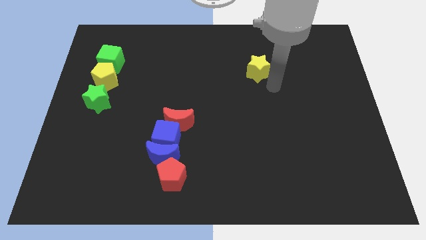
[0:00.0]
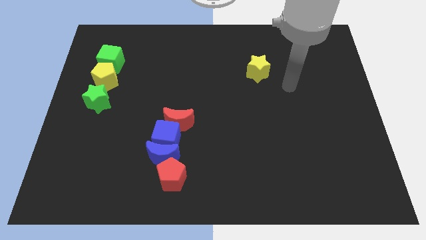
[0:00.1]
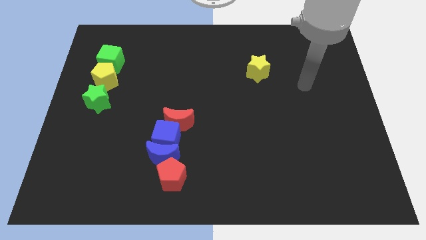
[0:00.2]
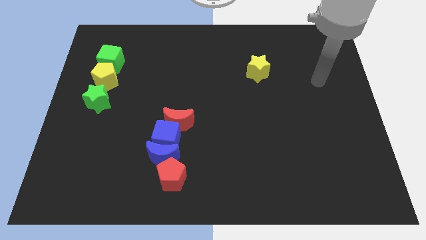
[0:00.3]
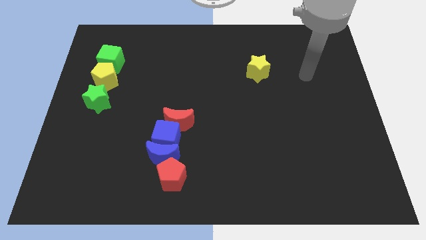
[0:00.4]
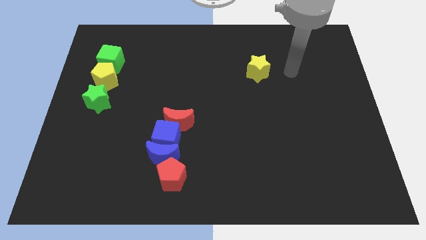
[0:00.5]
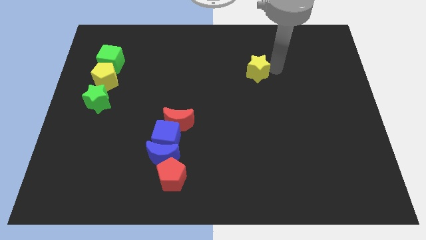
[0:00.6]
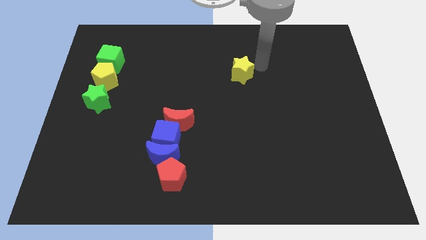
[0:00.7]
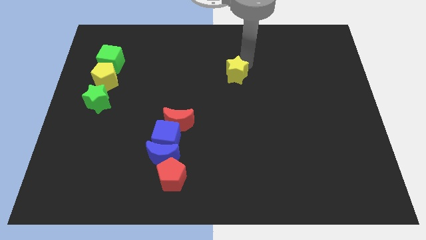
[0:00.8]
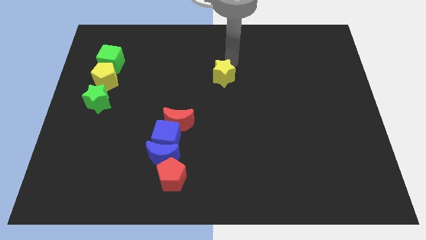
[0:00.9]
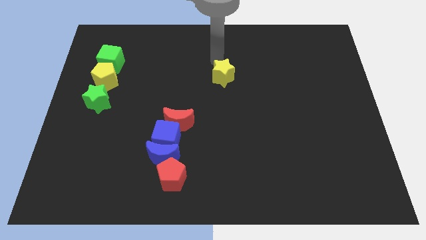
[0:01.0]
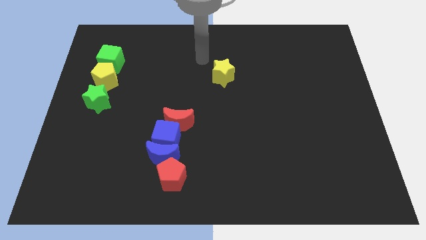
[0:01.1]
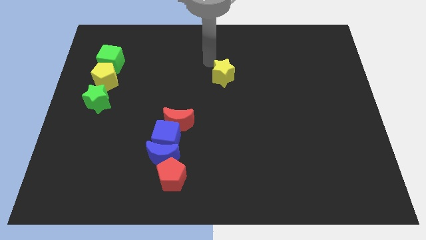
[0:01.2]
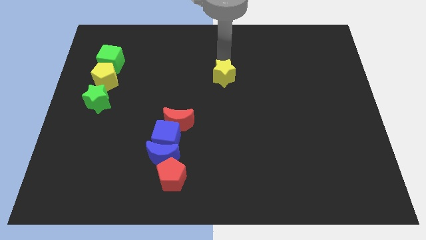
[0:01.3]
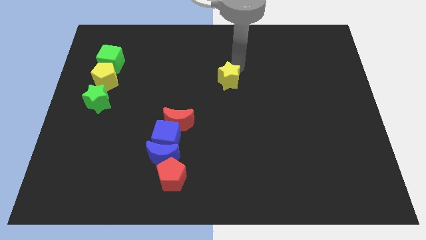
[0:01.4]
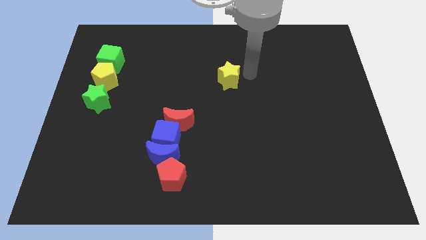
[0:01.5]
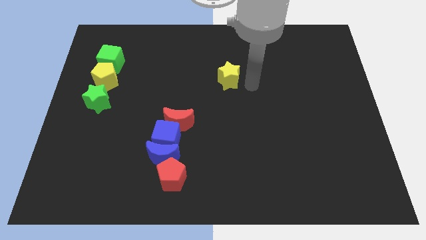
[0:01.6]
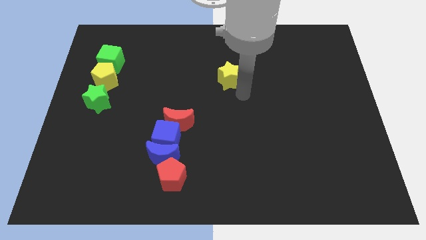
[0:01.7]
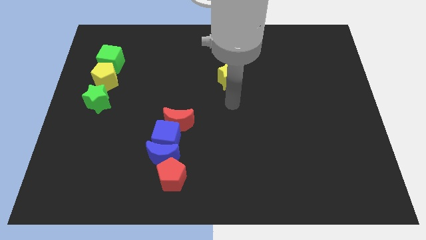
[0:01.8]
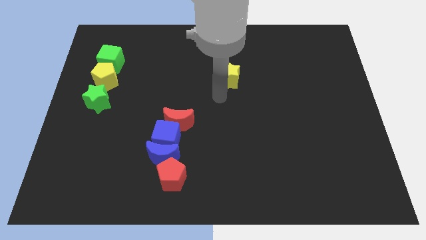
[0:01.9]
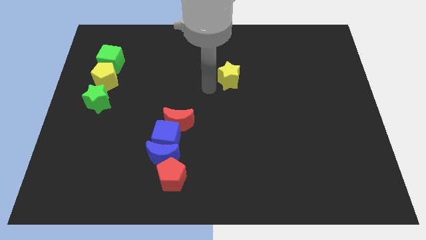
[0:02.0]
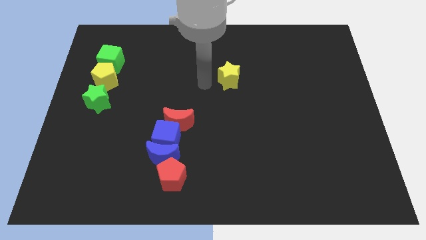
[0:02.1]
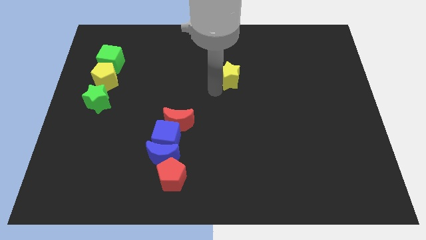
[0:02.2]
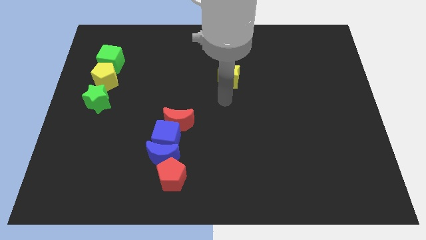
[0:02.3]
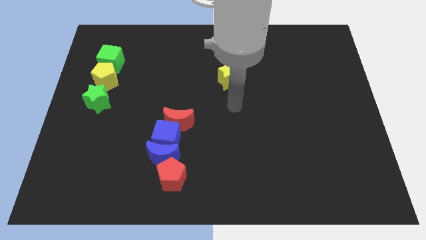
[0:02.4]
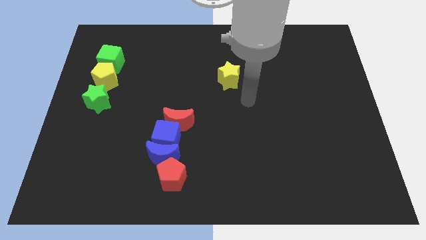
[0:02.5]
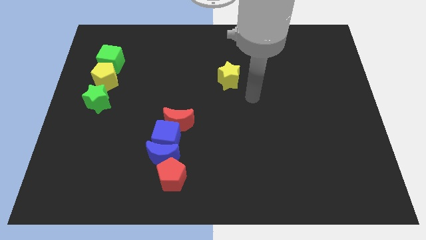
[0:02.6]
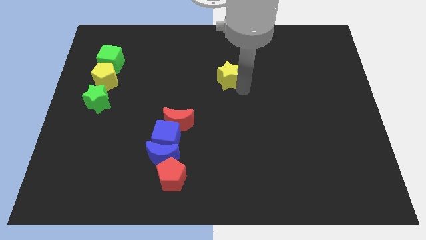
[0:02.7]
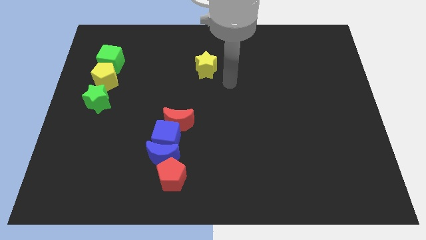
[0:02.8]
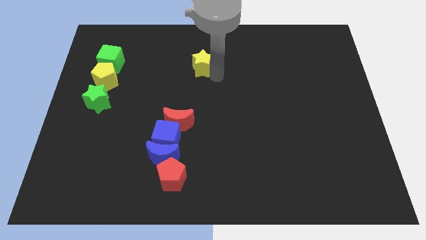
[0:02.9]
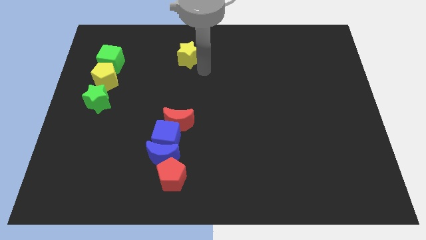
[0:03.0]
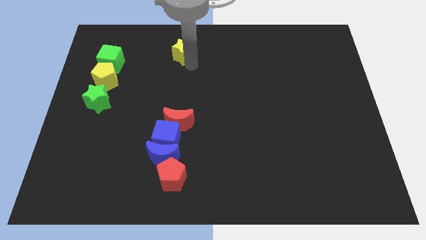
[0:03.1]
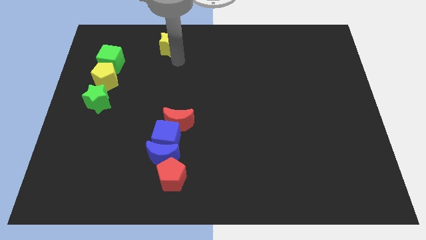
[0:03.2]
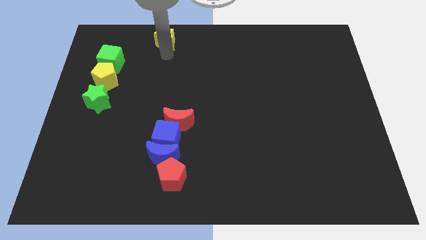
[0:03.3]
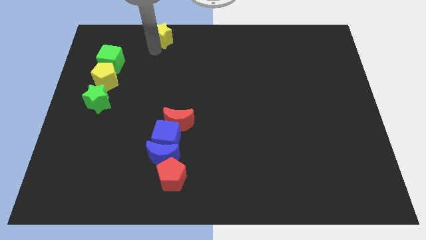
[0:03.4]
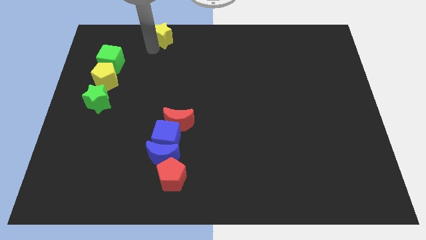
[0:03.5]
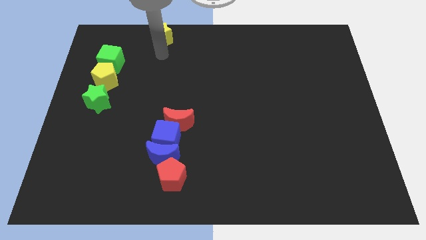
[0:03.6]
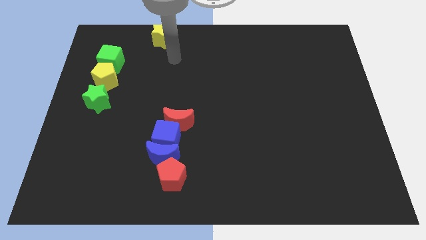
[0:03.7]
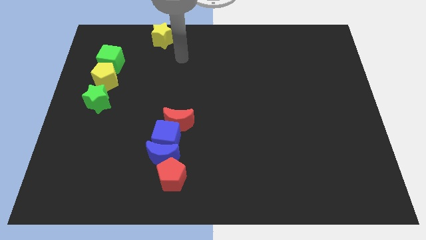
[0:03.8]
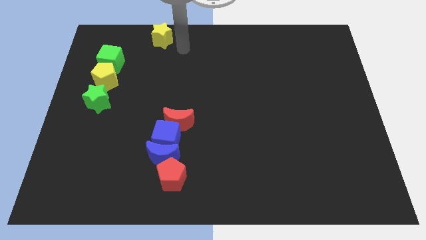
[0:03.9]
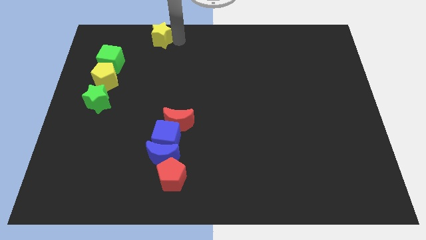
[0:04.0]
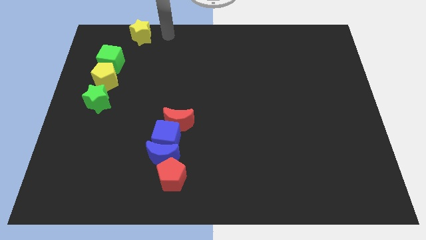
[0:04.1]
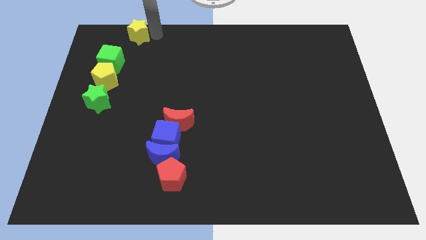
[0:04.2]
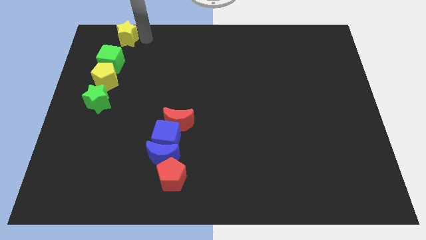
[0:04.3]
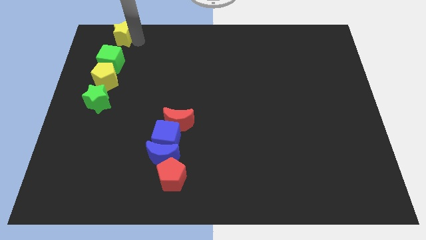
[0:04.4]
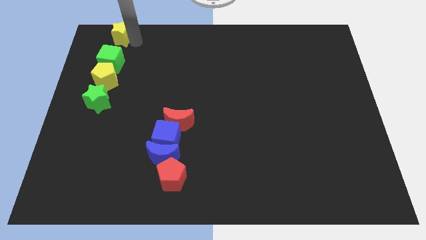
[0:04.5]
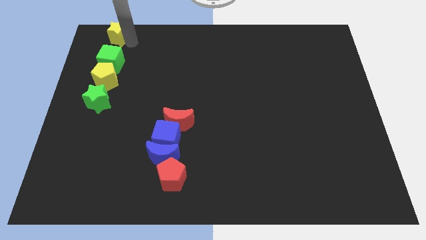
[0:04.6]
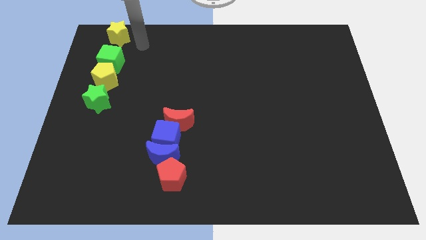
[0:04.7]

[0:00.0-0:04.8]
place the yellow star above the green cube

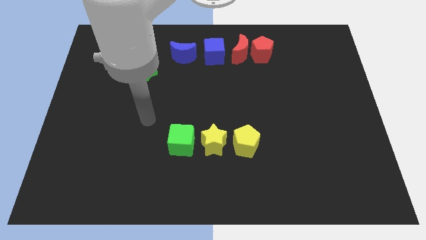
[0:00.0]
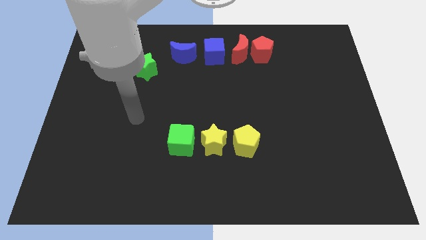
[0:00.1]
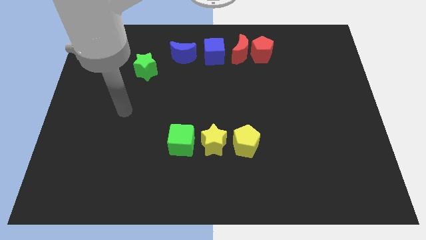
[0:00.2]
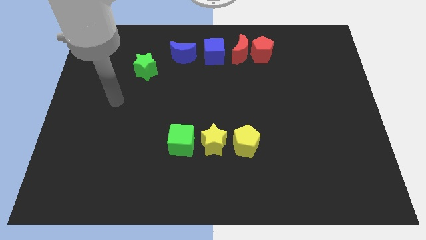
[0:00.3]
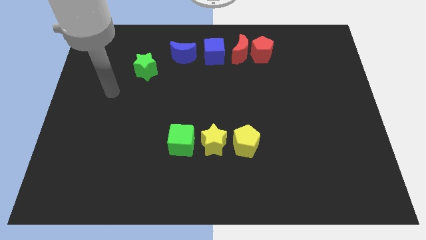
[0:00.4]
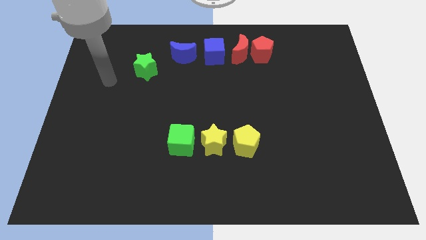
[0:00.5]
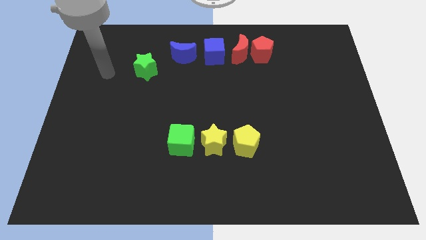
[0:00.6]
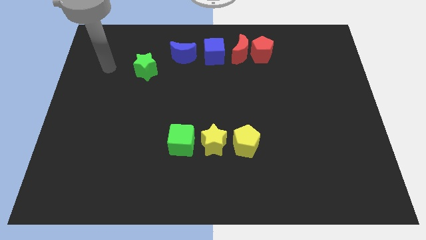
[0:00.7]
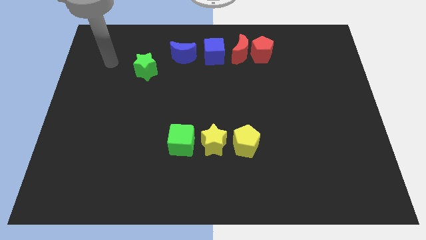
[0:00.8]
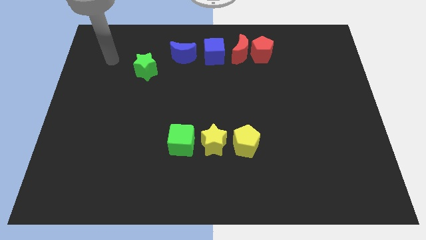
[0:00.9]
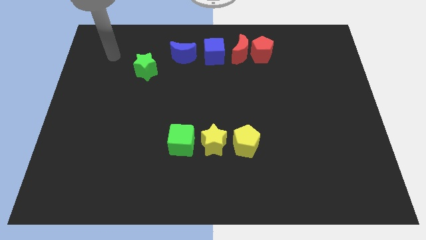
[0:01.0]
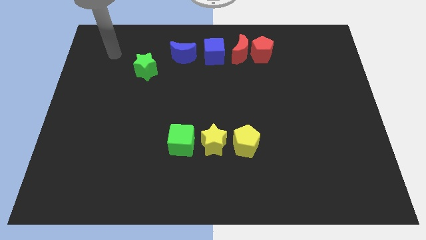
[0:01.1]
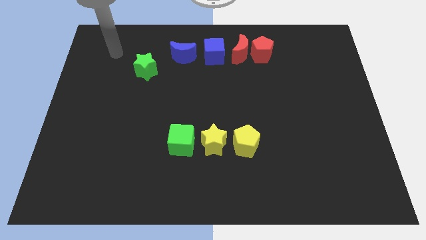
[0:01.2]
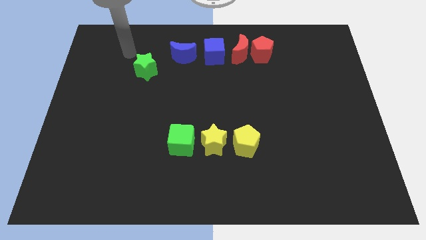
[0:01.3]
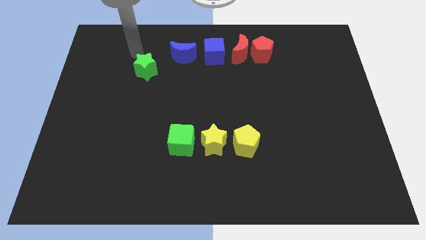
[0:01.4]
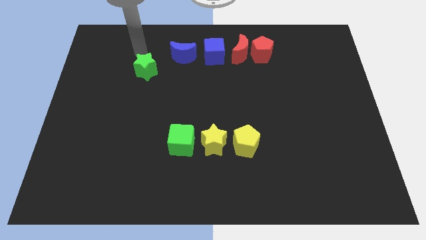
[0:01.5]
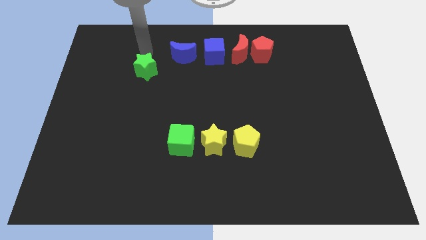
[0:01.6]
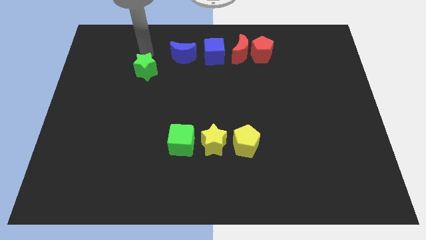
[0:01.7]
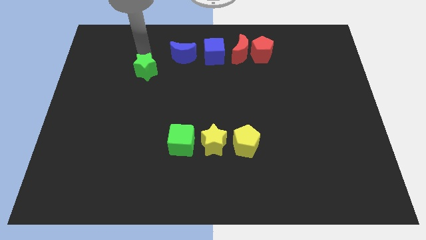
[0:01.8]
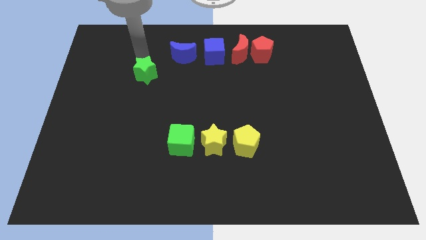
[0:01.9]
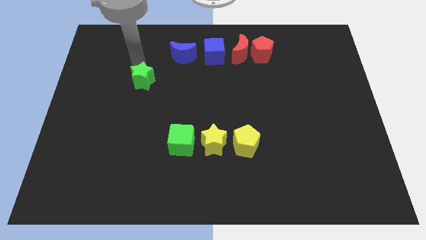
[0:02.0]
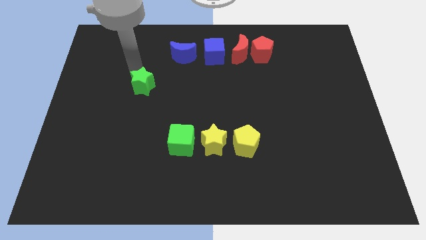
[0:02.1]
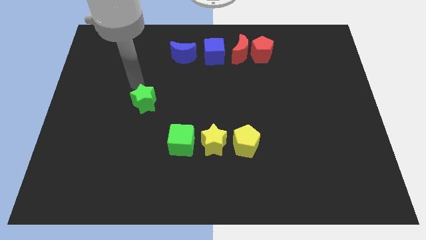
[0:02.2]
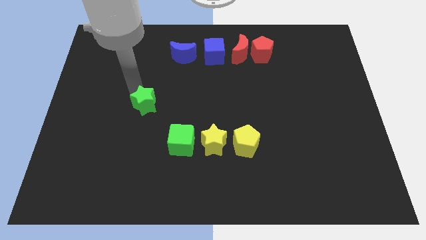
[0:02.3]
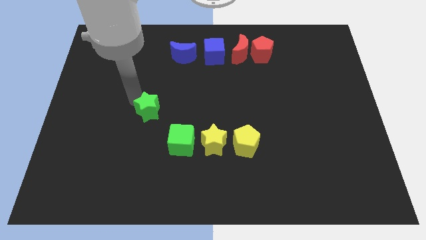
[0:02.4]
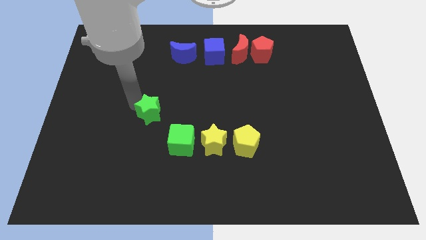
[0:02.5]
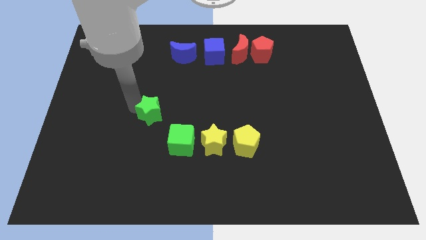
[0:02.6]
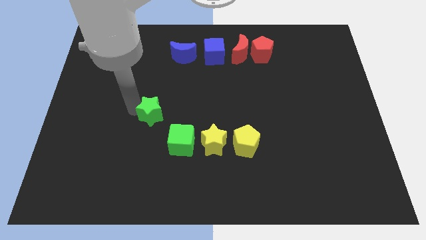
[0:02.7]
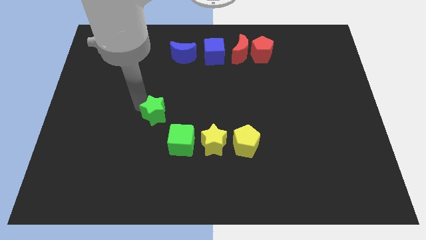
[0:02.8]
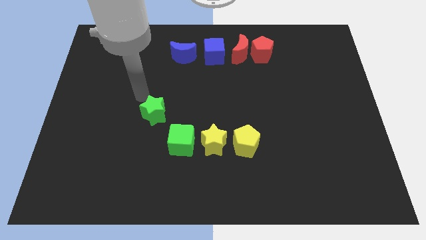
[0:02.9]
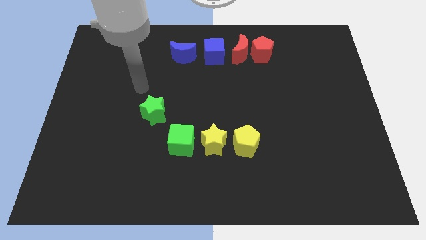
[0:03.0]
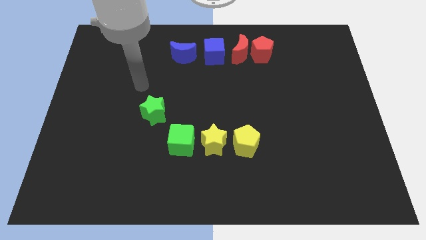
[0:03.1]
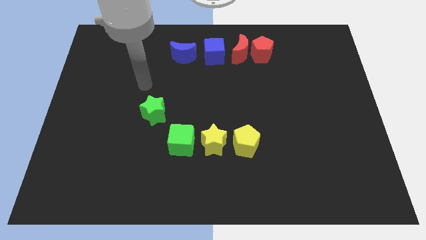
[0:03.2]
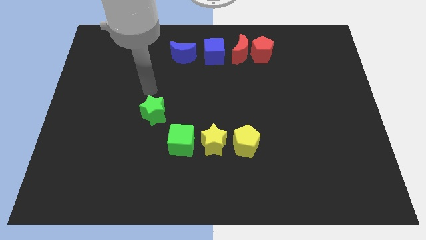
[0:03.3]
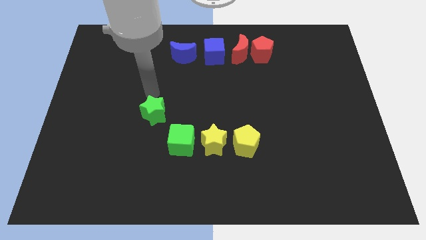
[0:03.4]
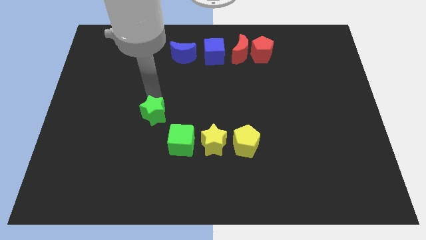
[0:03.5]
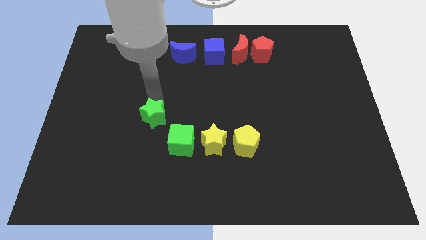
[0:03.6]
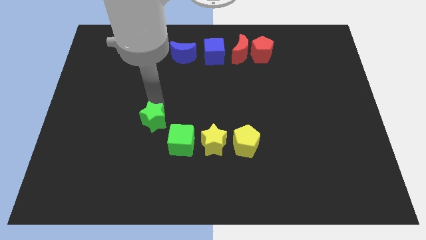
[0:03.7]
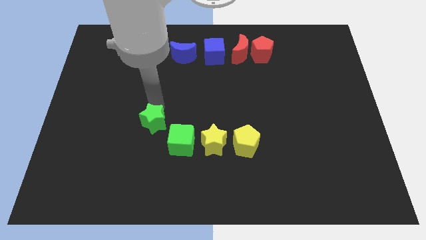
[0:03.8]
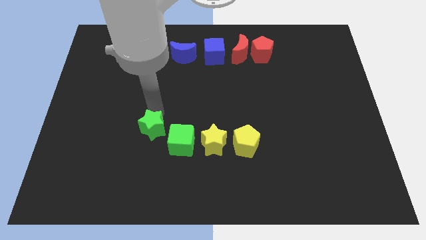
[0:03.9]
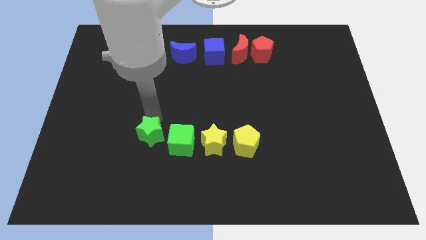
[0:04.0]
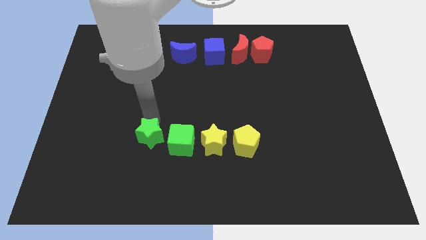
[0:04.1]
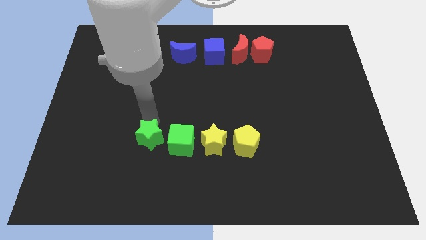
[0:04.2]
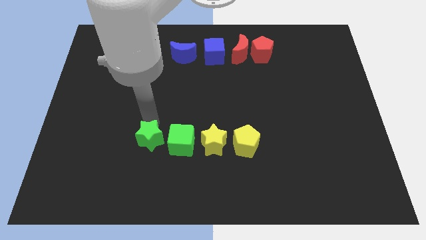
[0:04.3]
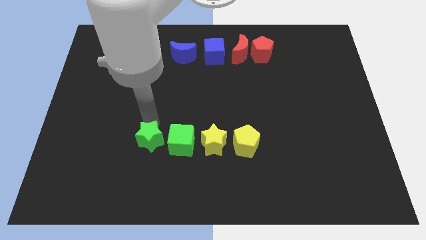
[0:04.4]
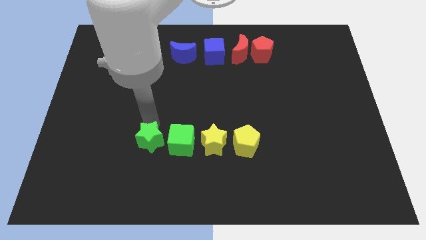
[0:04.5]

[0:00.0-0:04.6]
push the green star to the left of the green cube
